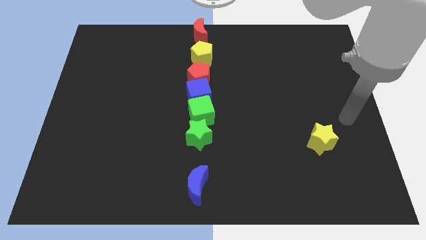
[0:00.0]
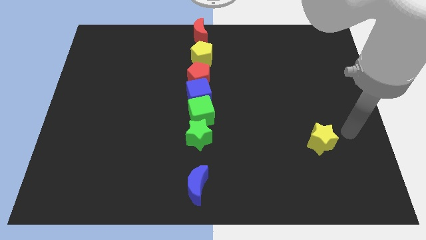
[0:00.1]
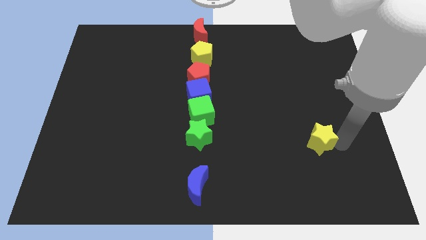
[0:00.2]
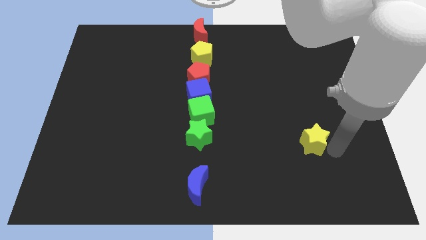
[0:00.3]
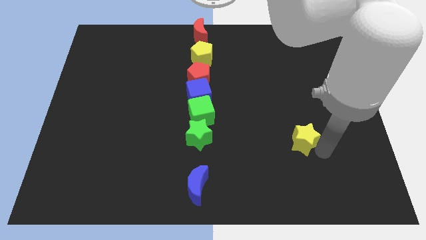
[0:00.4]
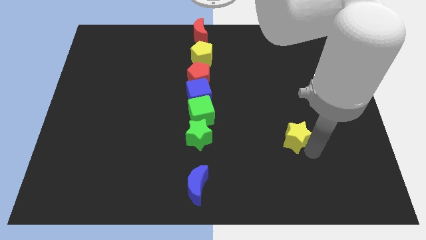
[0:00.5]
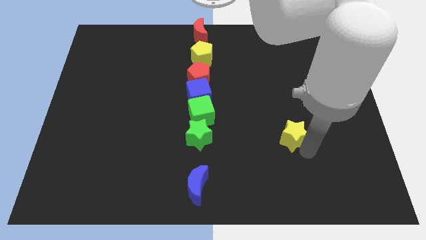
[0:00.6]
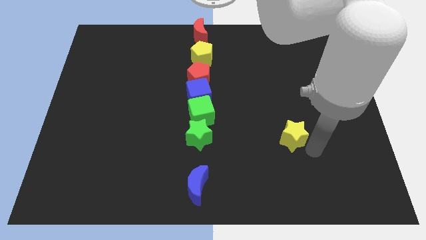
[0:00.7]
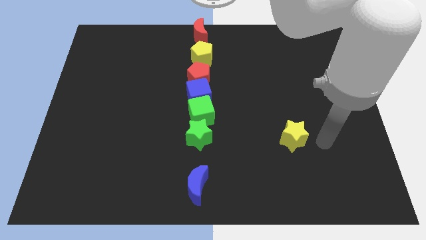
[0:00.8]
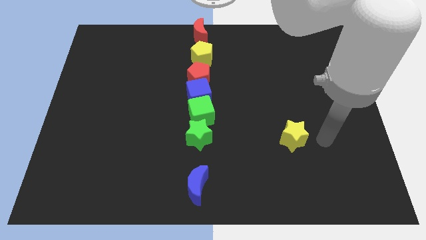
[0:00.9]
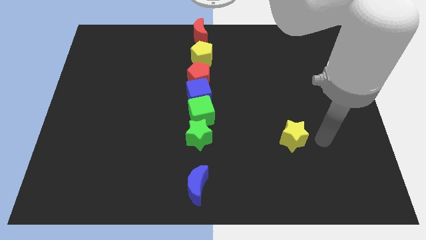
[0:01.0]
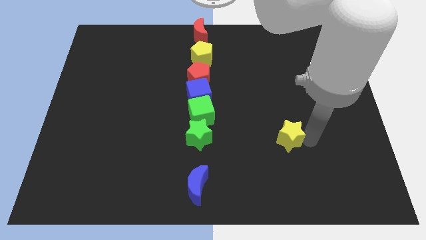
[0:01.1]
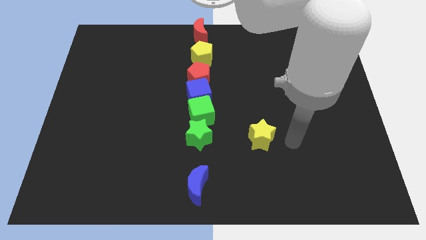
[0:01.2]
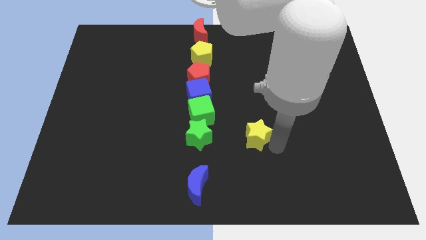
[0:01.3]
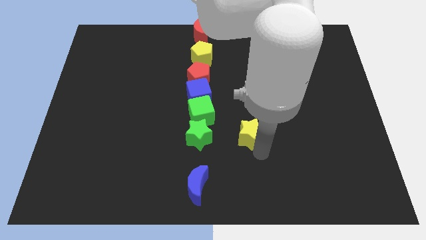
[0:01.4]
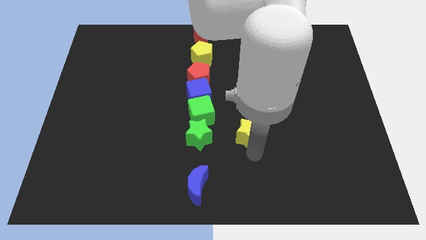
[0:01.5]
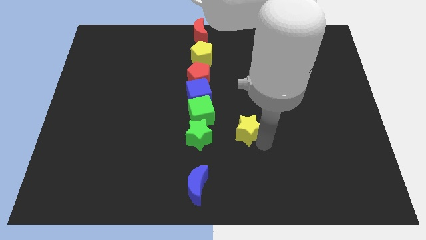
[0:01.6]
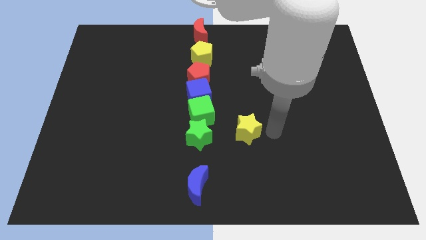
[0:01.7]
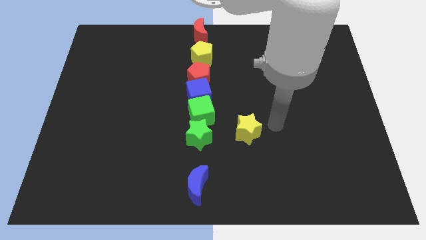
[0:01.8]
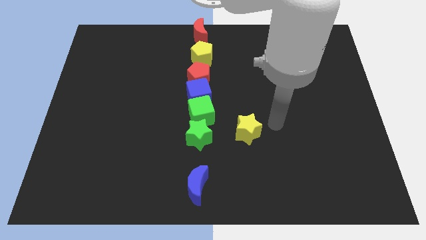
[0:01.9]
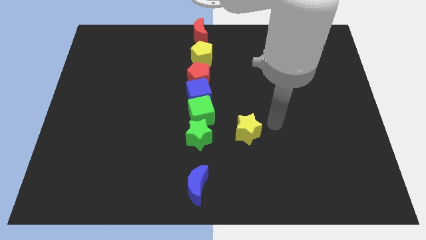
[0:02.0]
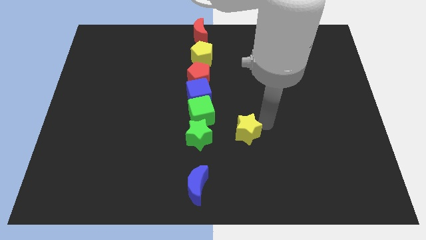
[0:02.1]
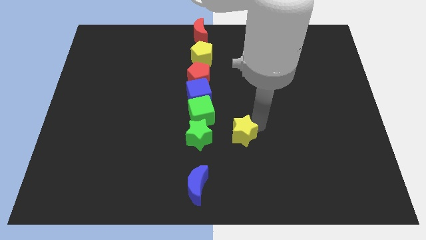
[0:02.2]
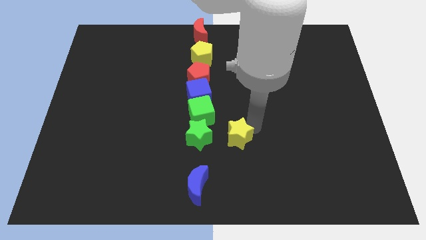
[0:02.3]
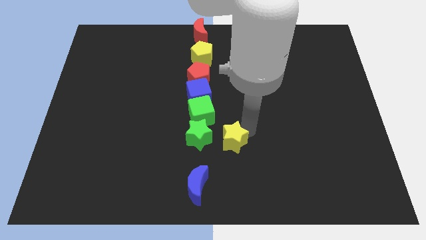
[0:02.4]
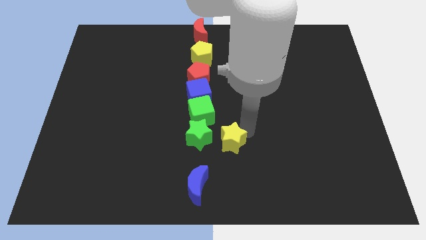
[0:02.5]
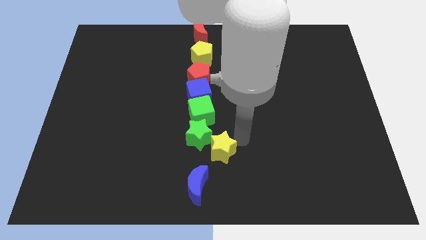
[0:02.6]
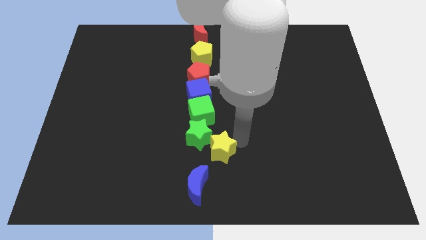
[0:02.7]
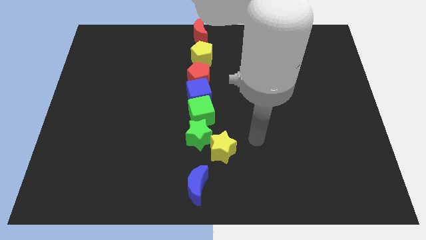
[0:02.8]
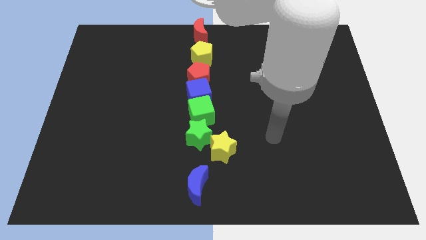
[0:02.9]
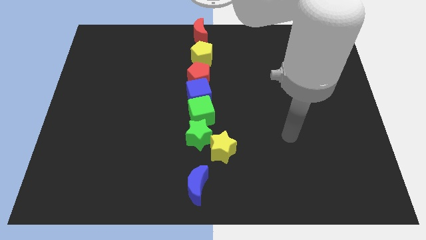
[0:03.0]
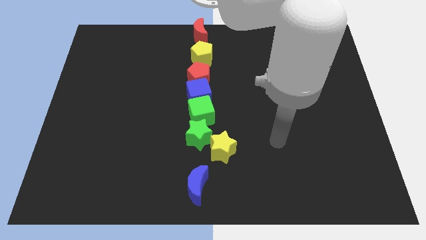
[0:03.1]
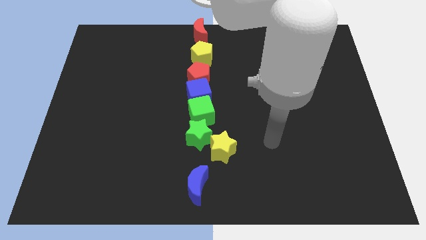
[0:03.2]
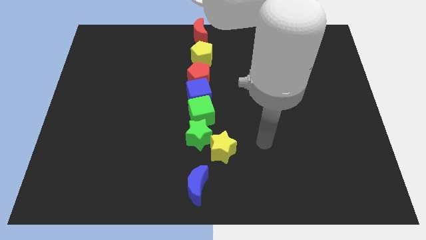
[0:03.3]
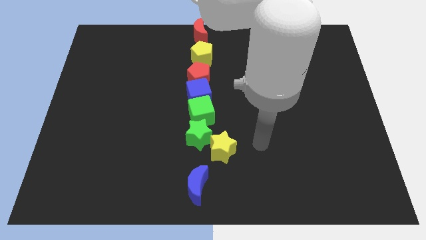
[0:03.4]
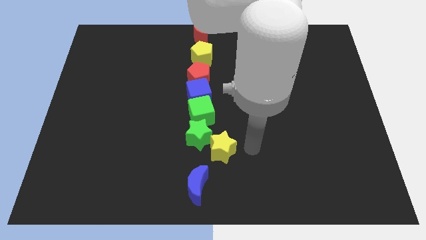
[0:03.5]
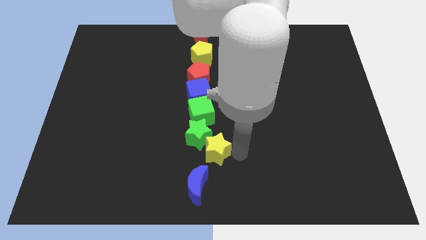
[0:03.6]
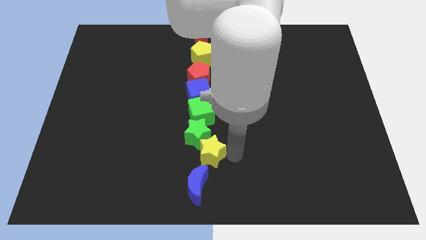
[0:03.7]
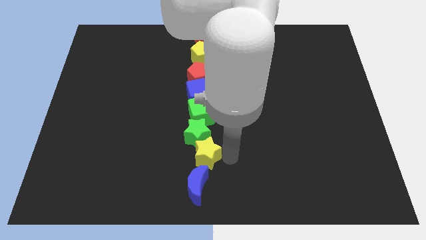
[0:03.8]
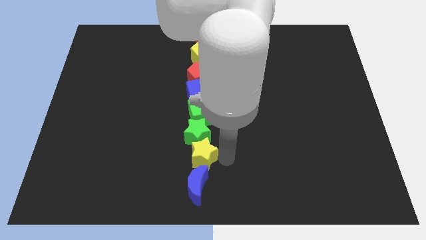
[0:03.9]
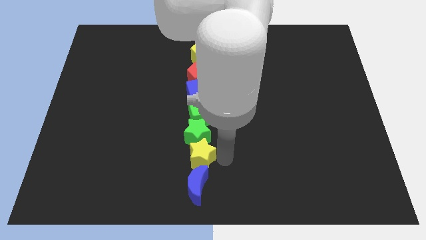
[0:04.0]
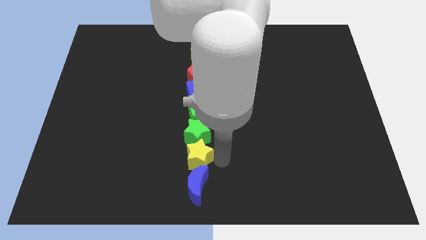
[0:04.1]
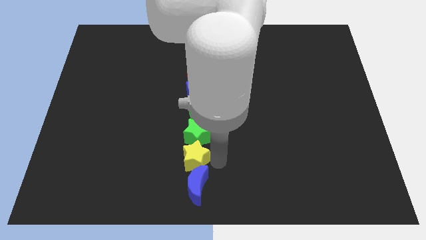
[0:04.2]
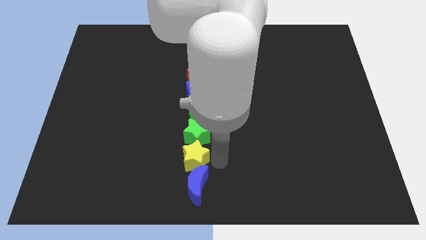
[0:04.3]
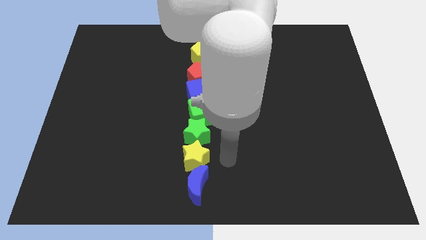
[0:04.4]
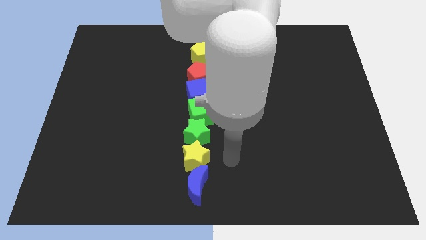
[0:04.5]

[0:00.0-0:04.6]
place the yellow star in between the green star and blue crescent

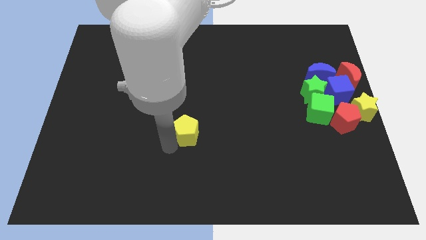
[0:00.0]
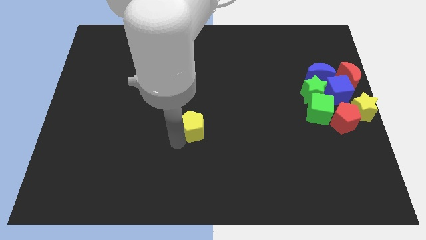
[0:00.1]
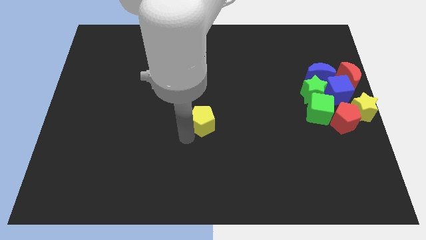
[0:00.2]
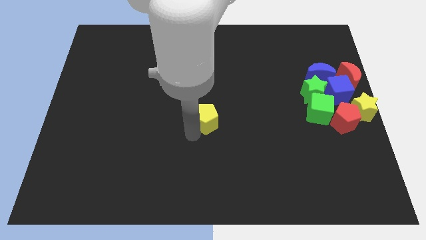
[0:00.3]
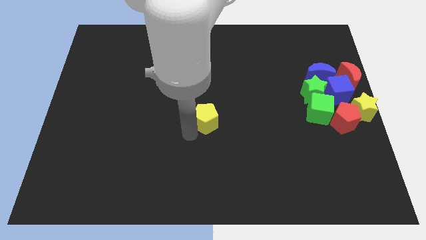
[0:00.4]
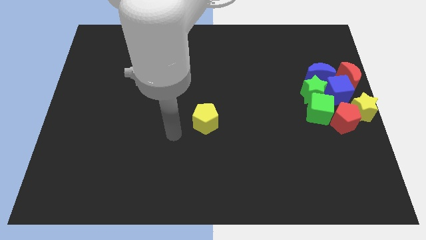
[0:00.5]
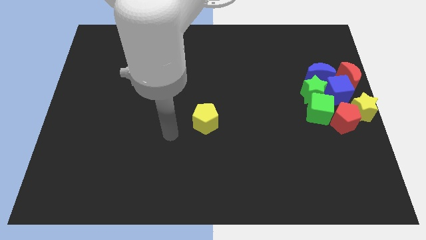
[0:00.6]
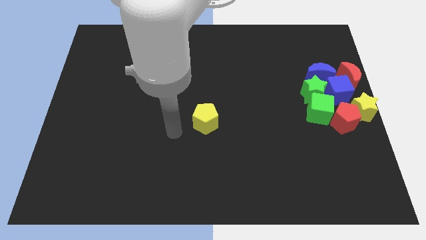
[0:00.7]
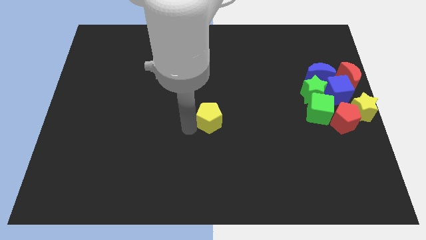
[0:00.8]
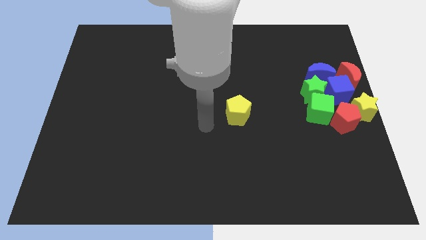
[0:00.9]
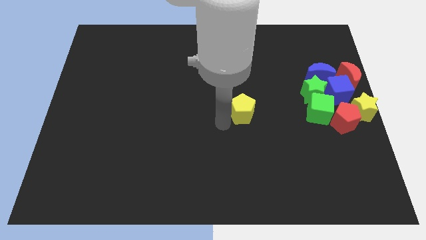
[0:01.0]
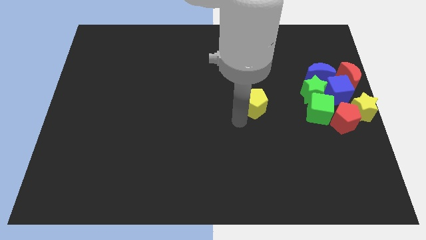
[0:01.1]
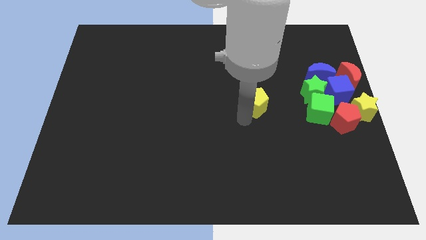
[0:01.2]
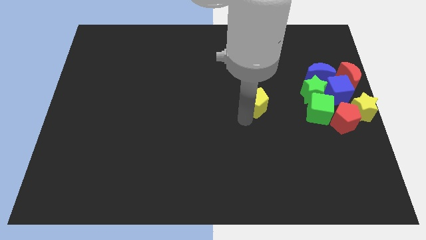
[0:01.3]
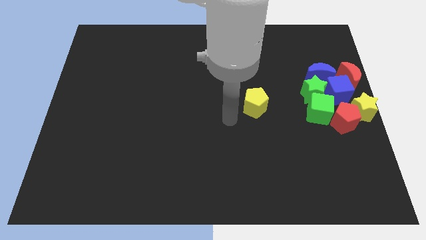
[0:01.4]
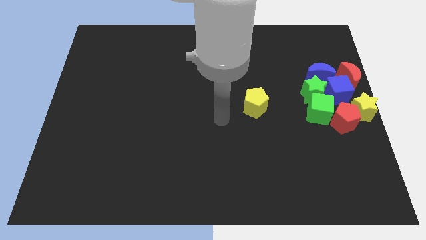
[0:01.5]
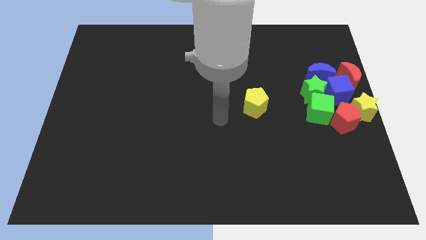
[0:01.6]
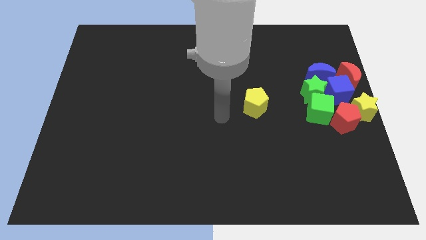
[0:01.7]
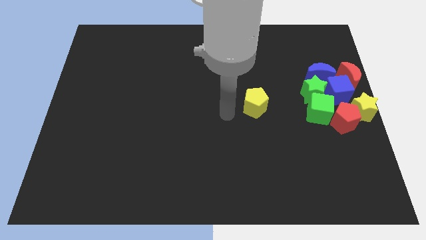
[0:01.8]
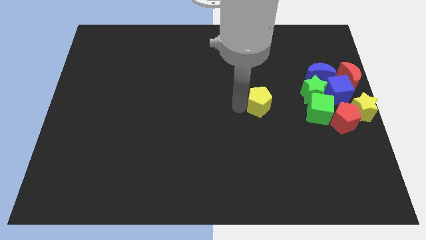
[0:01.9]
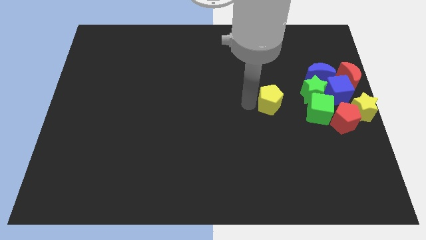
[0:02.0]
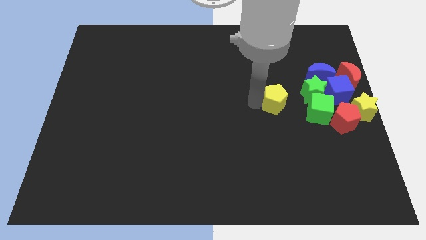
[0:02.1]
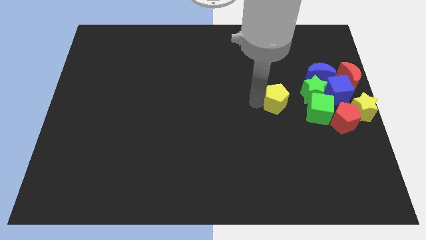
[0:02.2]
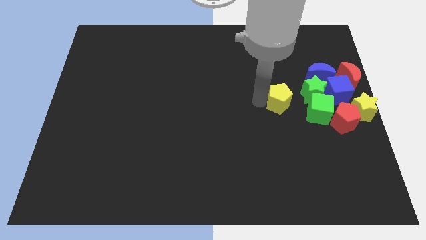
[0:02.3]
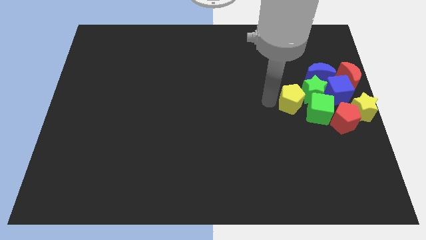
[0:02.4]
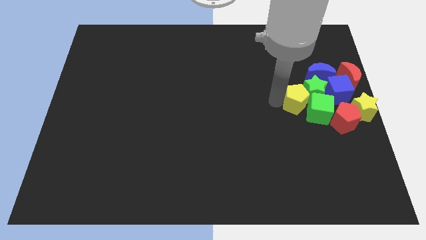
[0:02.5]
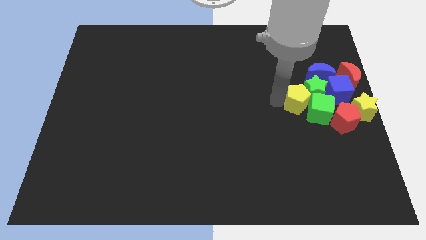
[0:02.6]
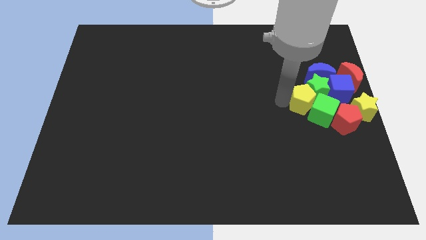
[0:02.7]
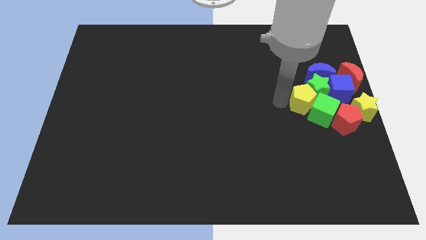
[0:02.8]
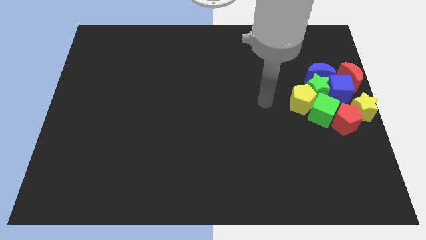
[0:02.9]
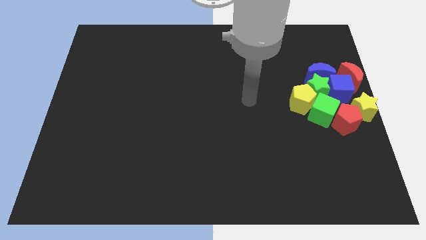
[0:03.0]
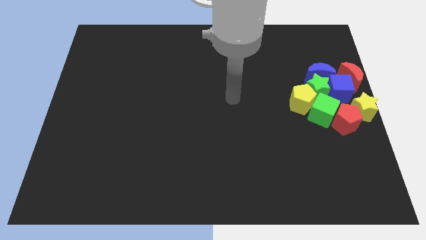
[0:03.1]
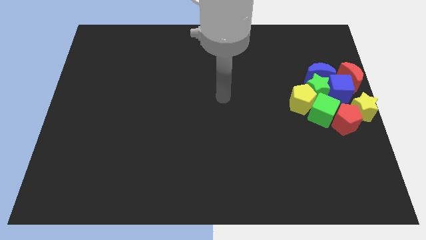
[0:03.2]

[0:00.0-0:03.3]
push the yellow pentagon to the group of objects

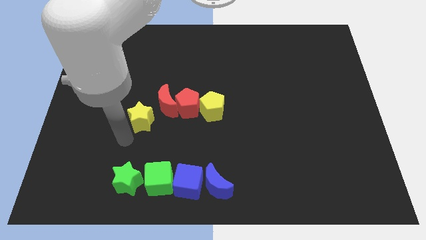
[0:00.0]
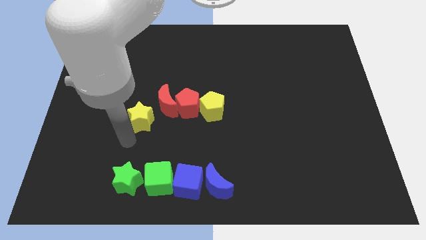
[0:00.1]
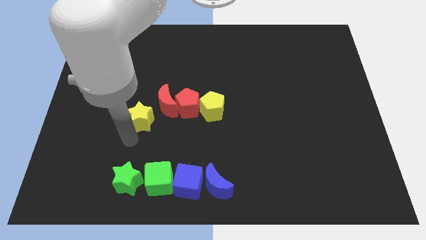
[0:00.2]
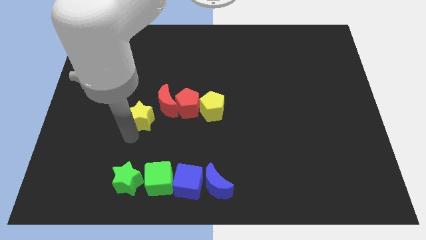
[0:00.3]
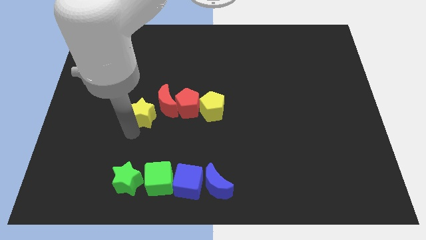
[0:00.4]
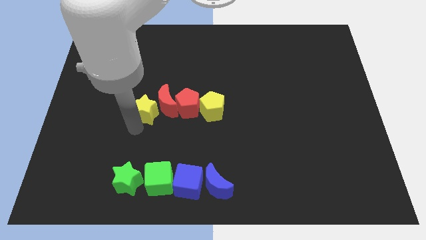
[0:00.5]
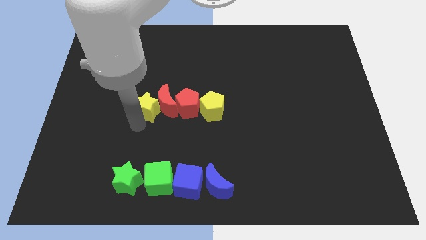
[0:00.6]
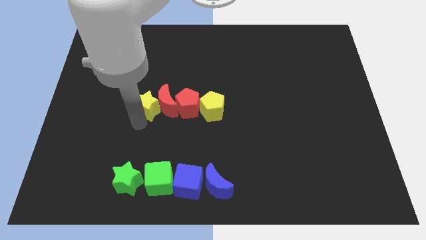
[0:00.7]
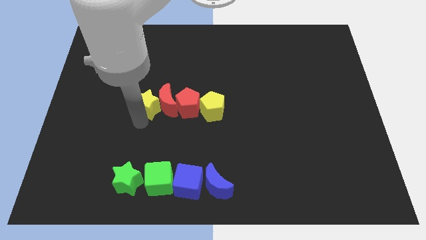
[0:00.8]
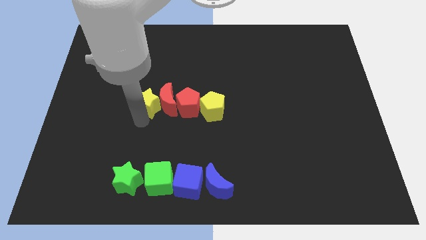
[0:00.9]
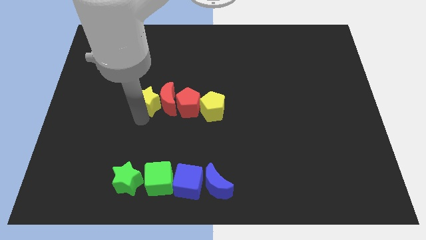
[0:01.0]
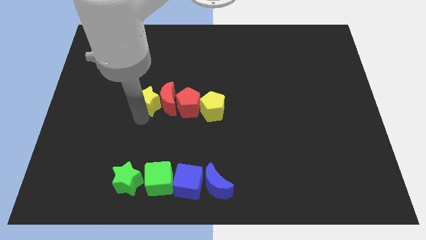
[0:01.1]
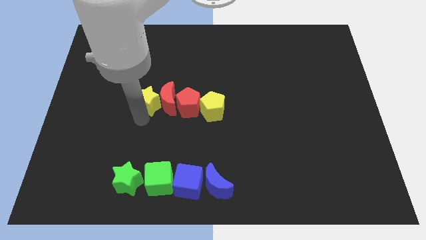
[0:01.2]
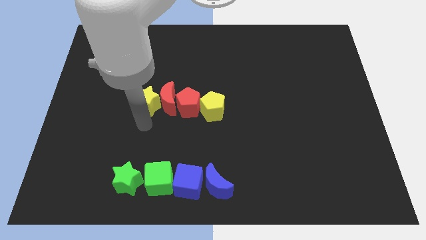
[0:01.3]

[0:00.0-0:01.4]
move the yellow star left to the red moon
